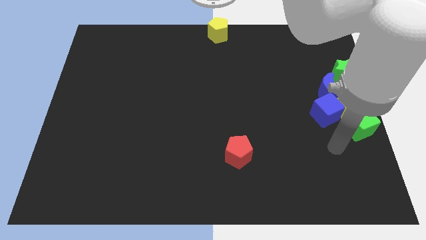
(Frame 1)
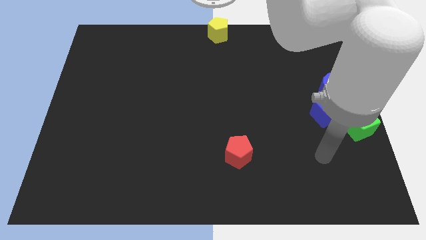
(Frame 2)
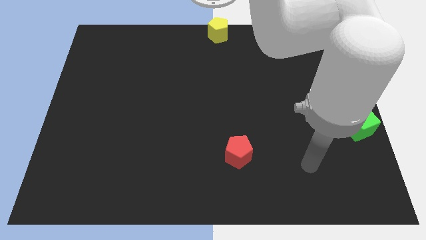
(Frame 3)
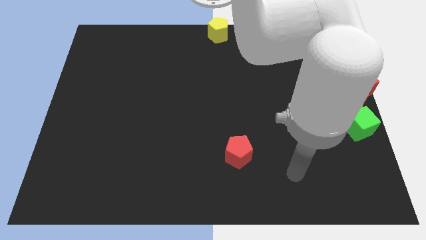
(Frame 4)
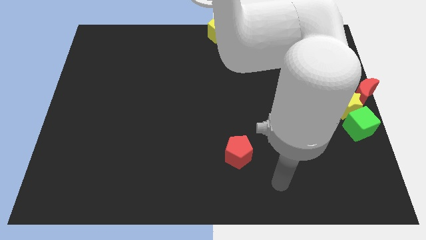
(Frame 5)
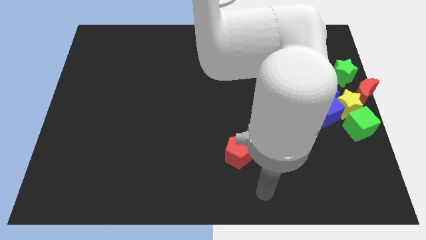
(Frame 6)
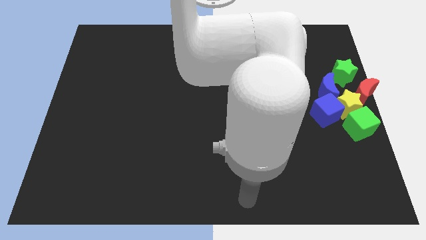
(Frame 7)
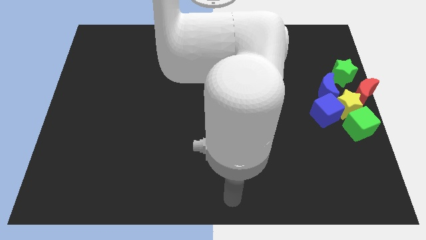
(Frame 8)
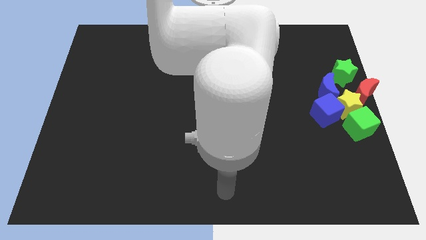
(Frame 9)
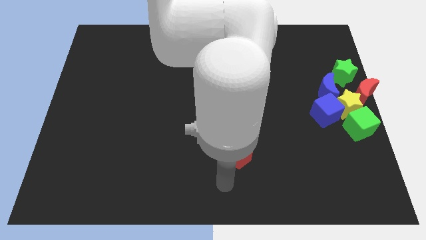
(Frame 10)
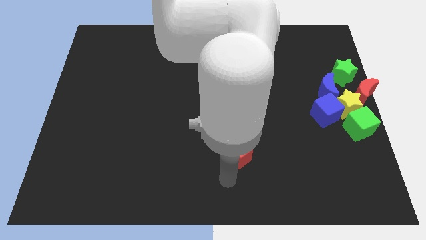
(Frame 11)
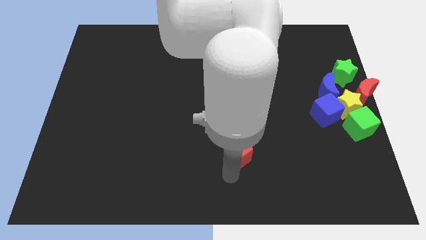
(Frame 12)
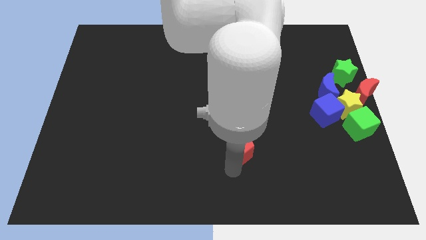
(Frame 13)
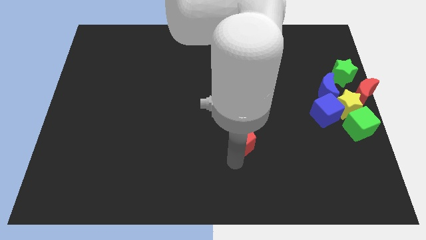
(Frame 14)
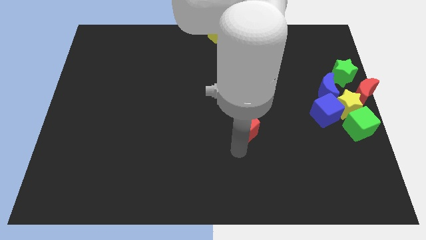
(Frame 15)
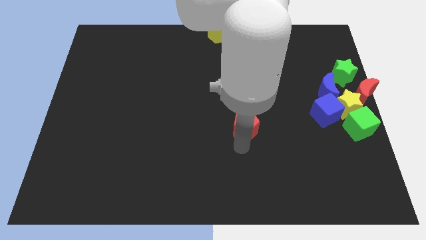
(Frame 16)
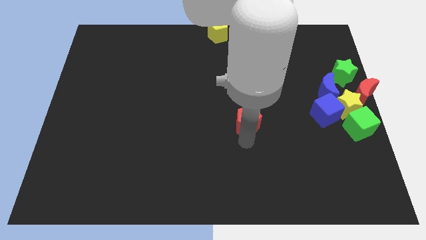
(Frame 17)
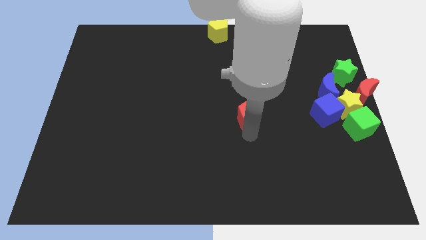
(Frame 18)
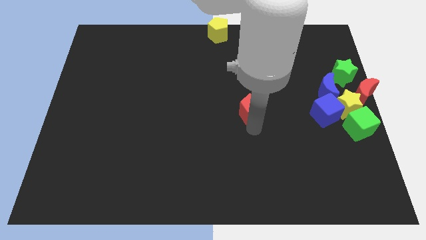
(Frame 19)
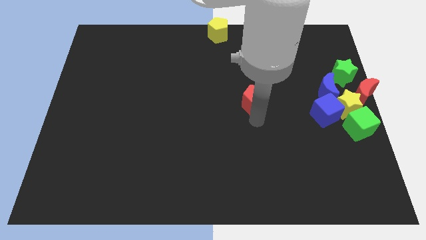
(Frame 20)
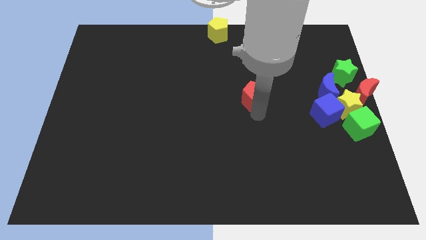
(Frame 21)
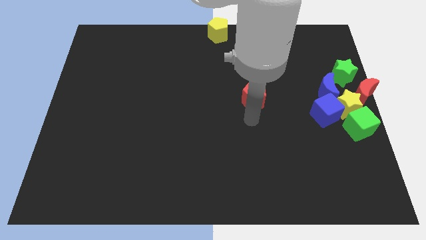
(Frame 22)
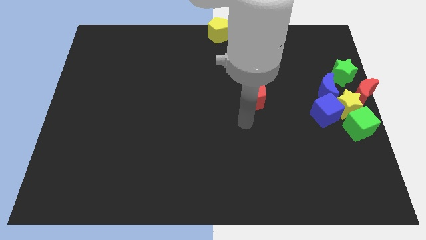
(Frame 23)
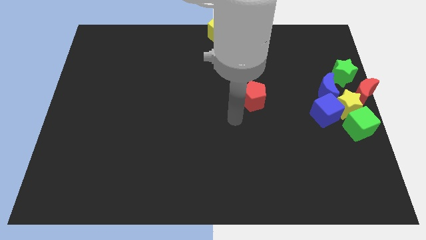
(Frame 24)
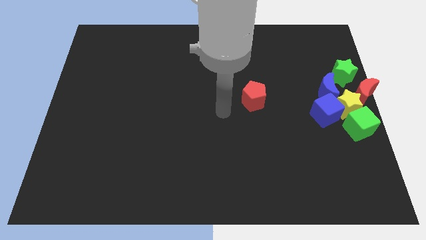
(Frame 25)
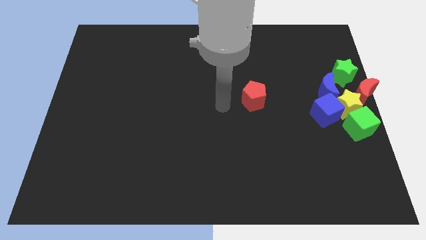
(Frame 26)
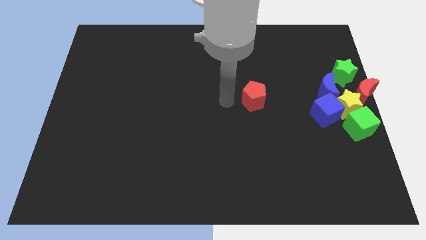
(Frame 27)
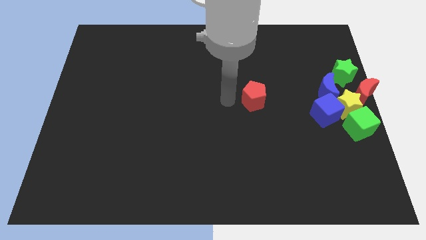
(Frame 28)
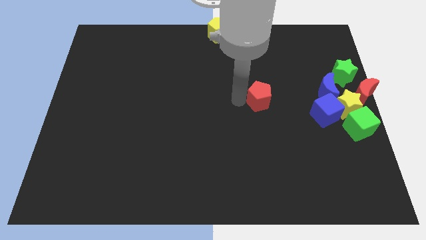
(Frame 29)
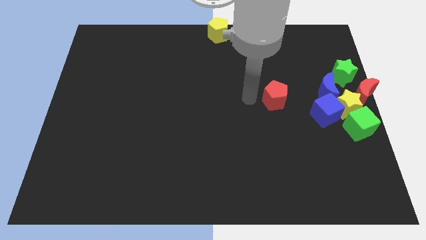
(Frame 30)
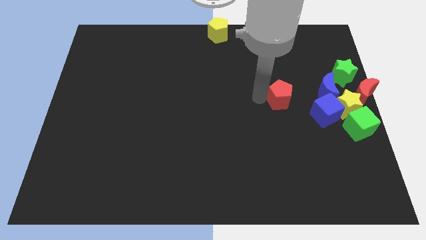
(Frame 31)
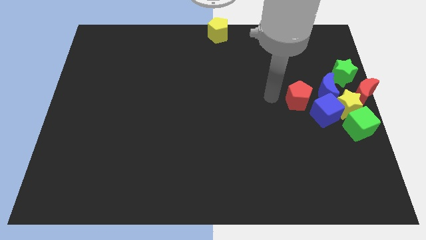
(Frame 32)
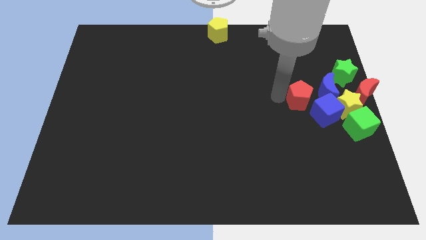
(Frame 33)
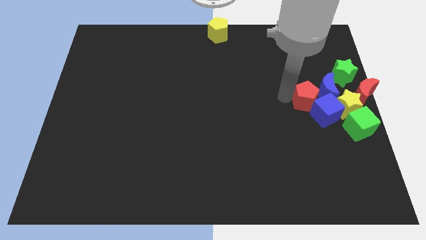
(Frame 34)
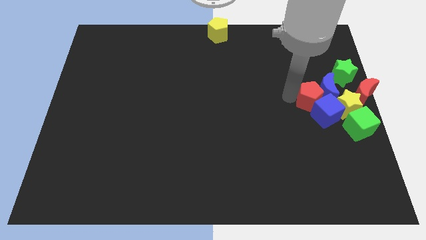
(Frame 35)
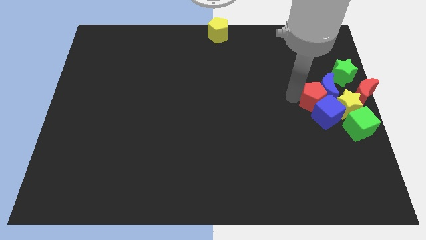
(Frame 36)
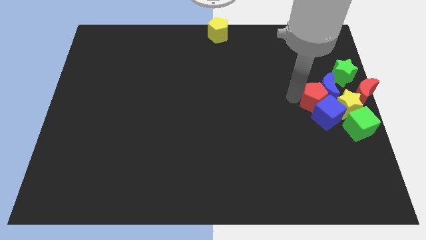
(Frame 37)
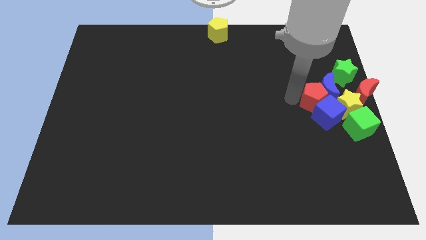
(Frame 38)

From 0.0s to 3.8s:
slide the red pentagon into the group of blocks

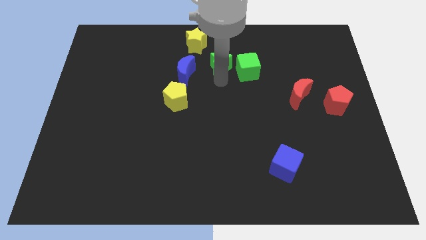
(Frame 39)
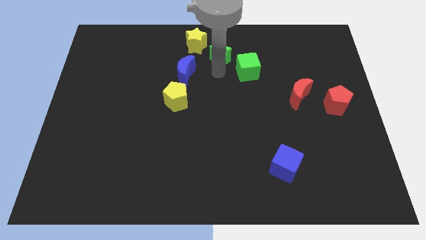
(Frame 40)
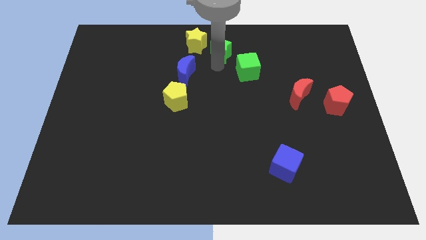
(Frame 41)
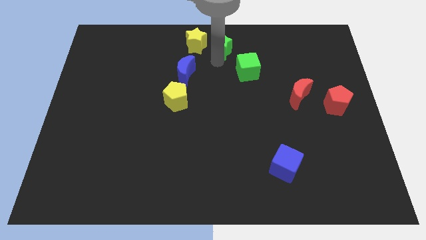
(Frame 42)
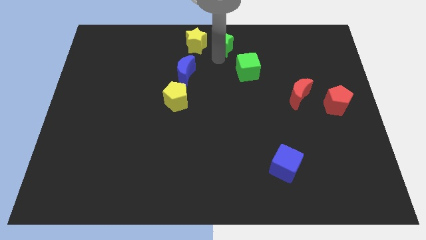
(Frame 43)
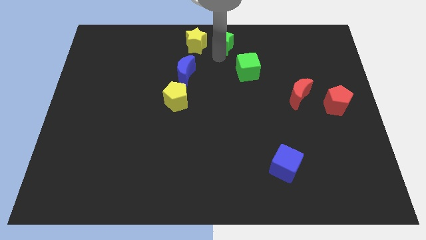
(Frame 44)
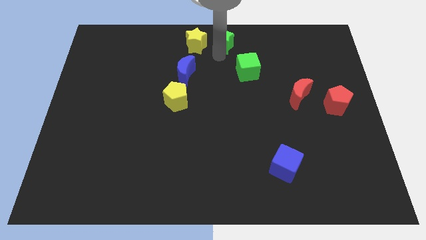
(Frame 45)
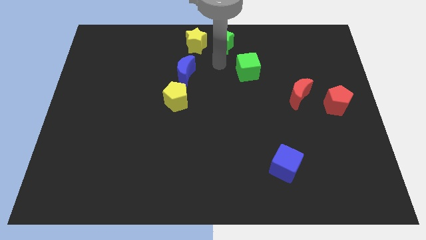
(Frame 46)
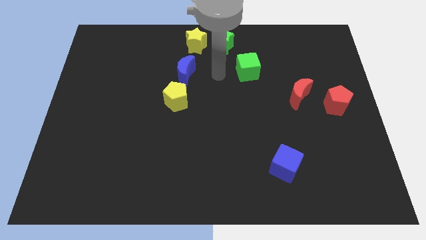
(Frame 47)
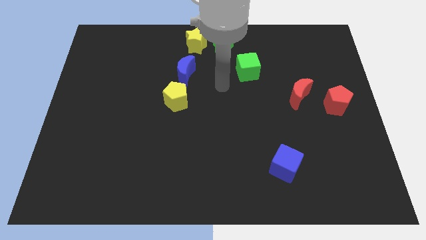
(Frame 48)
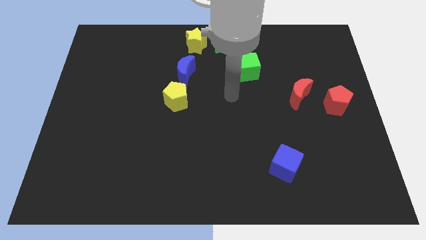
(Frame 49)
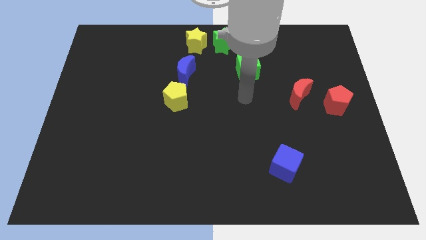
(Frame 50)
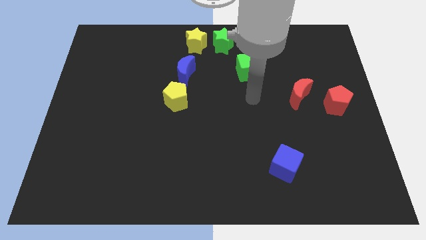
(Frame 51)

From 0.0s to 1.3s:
move green star to the top center of the board

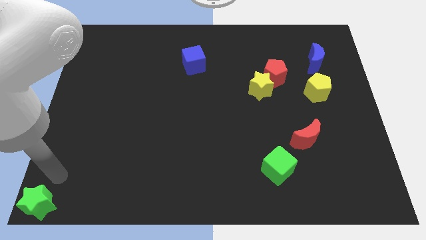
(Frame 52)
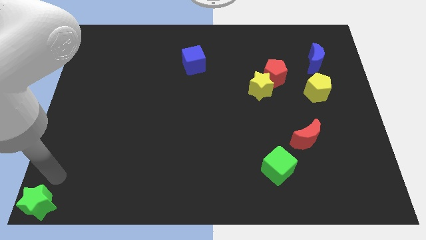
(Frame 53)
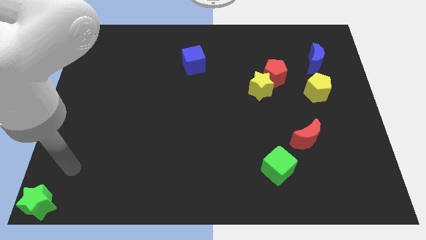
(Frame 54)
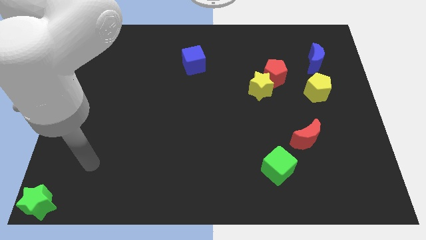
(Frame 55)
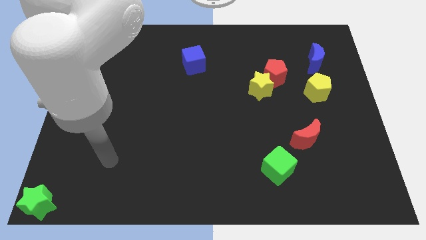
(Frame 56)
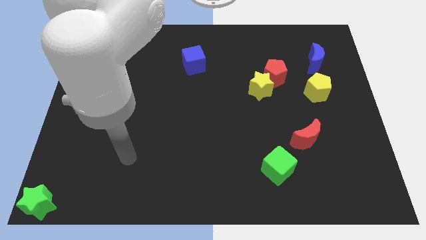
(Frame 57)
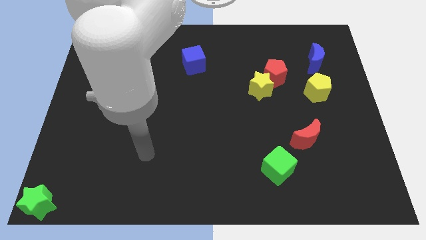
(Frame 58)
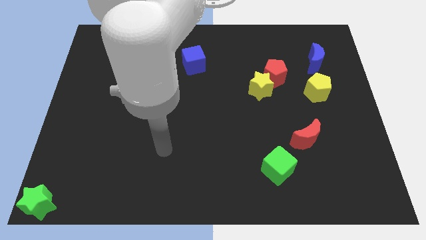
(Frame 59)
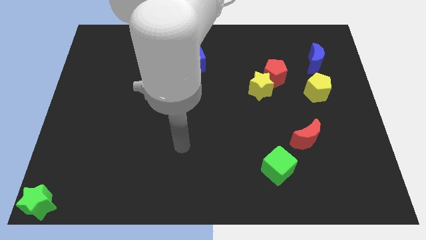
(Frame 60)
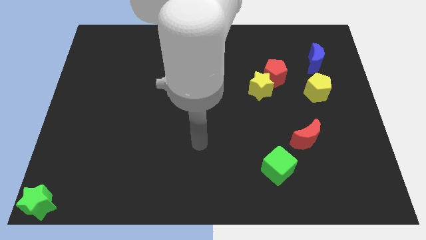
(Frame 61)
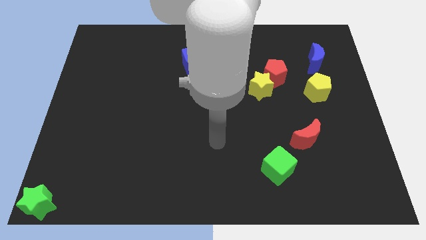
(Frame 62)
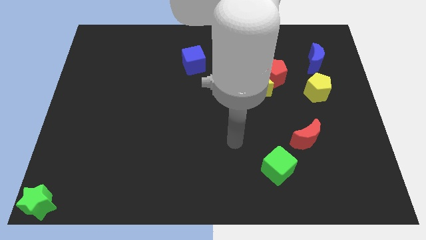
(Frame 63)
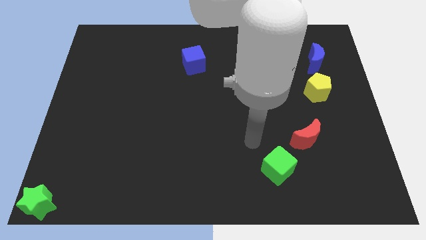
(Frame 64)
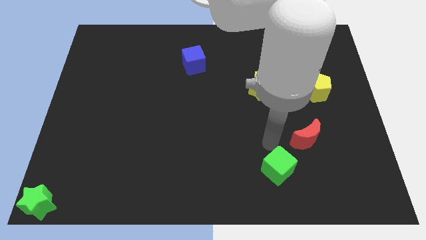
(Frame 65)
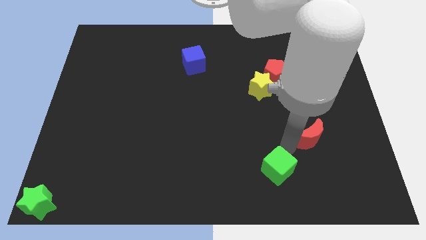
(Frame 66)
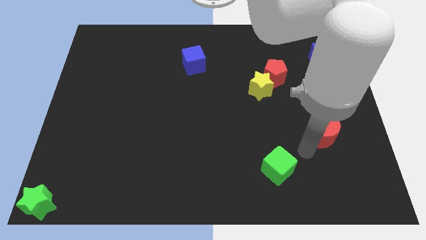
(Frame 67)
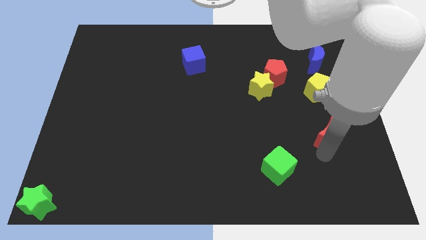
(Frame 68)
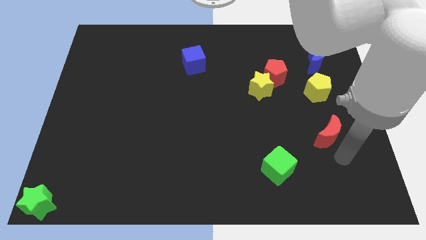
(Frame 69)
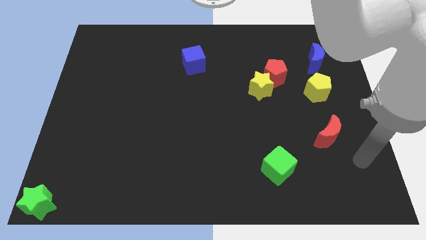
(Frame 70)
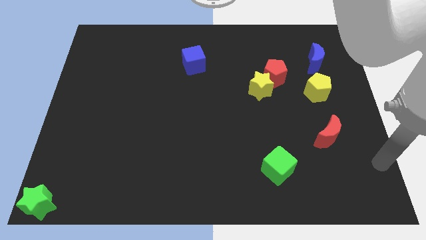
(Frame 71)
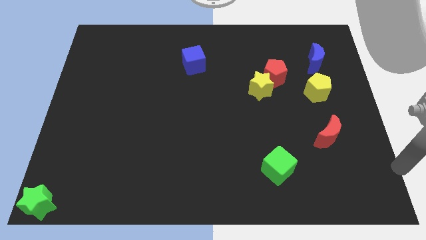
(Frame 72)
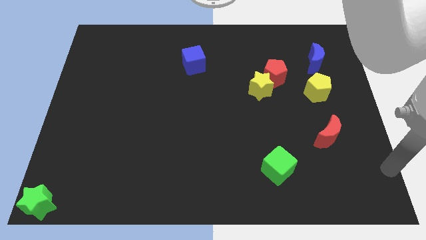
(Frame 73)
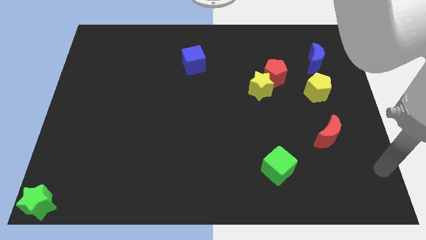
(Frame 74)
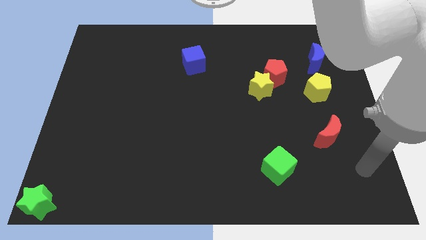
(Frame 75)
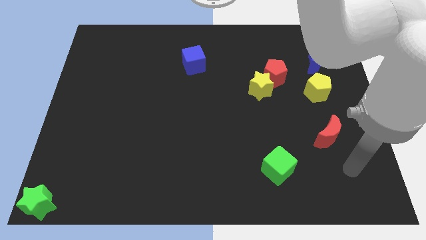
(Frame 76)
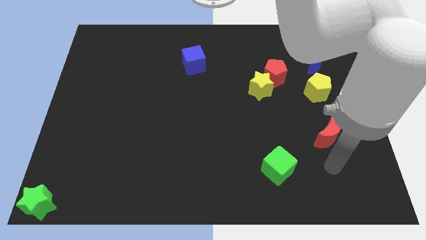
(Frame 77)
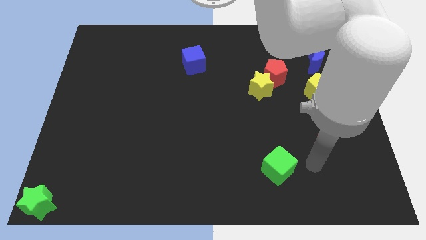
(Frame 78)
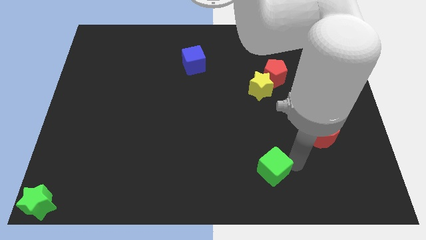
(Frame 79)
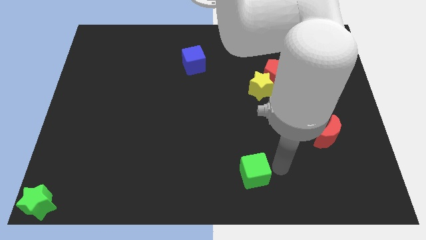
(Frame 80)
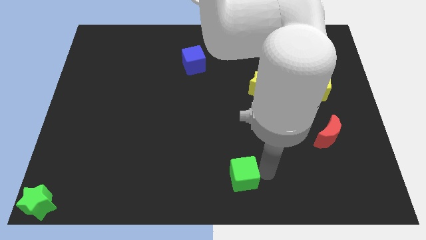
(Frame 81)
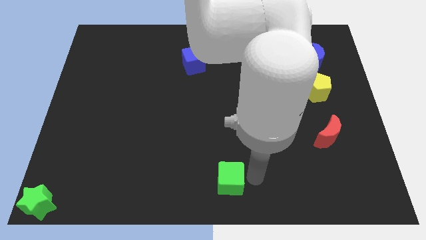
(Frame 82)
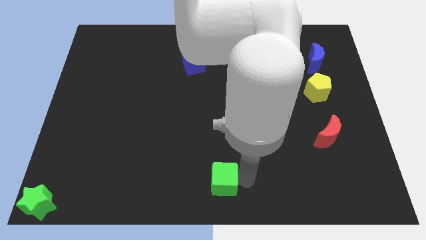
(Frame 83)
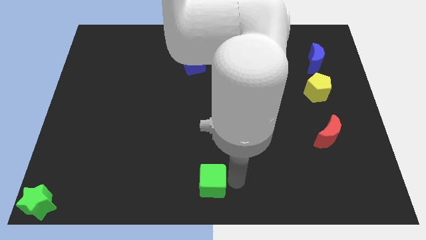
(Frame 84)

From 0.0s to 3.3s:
move the green cube to the bottom center of the table

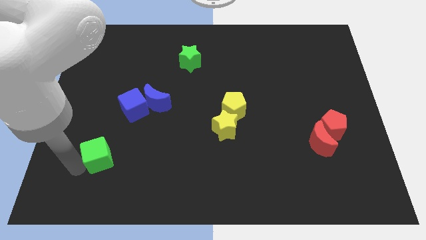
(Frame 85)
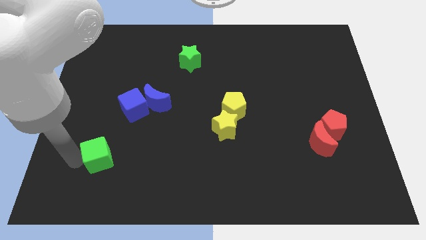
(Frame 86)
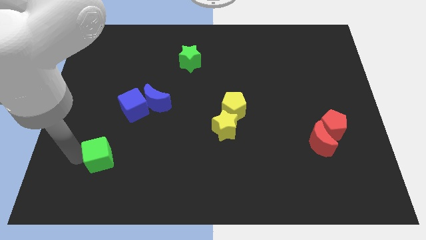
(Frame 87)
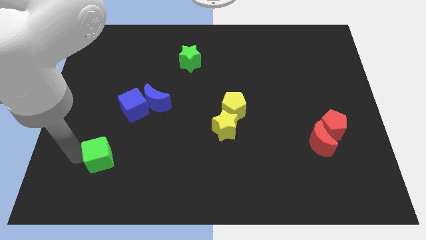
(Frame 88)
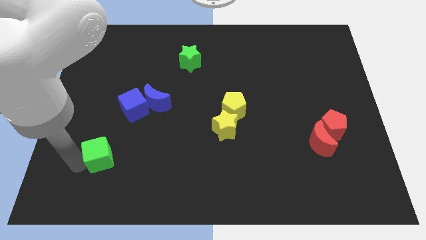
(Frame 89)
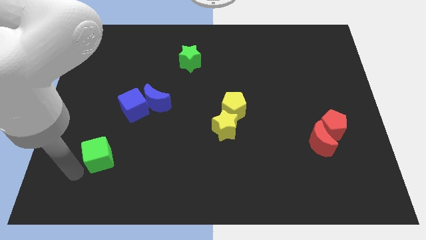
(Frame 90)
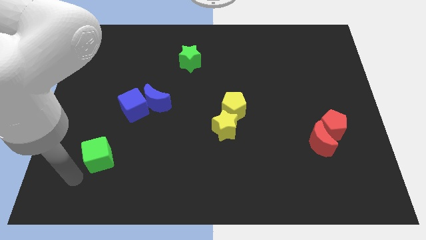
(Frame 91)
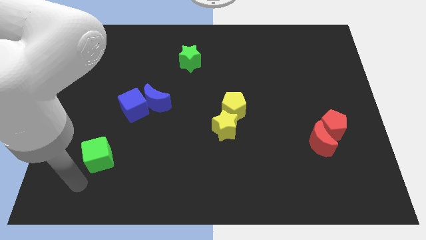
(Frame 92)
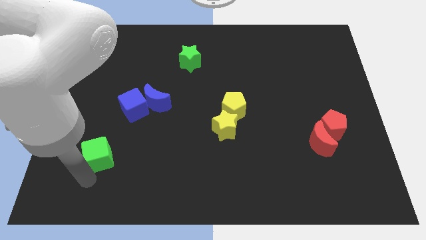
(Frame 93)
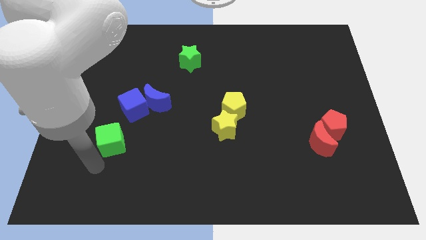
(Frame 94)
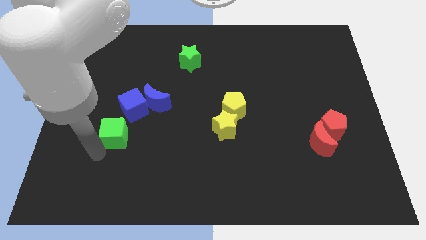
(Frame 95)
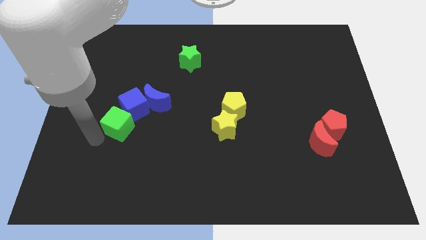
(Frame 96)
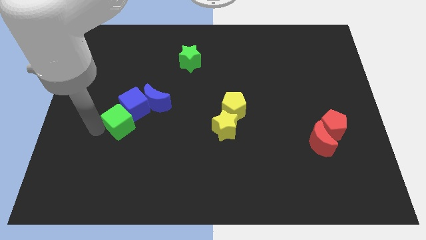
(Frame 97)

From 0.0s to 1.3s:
move green cube into blue cube
